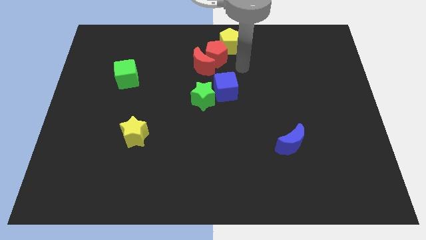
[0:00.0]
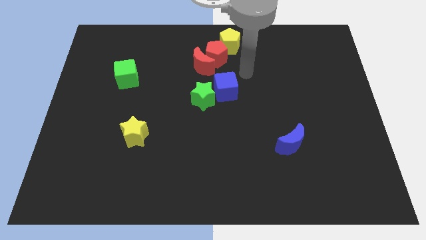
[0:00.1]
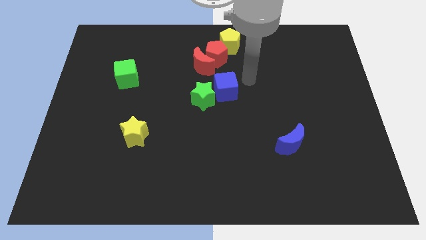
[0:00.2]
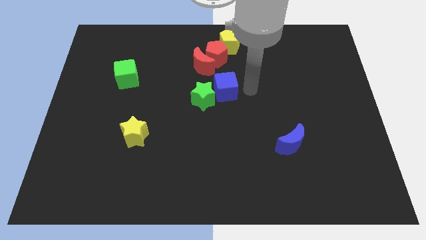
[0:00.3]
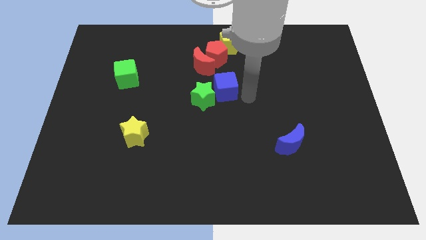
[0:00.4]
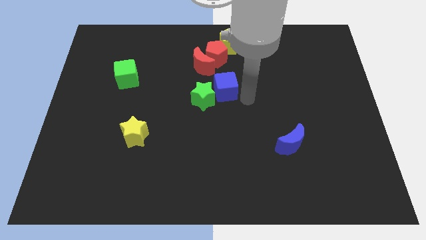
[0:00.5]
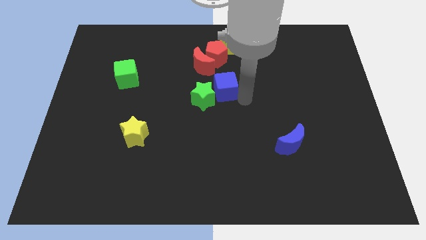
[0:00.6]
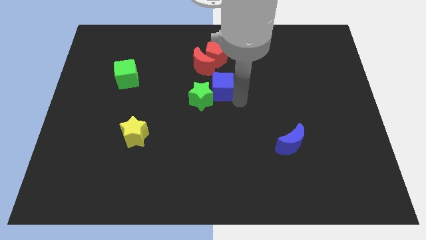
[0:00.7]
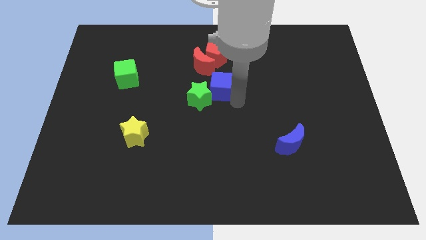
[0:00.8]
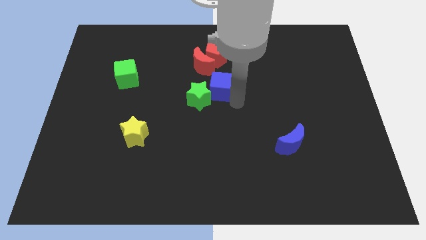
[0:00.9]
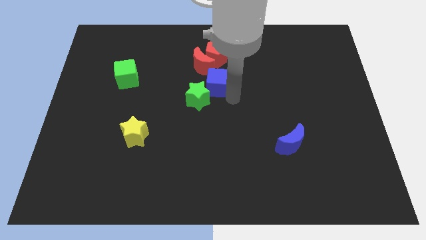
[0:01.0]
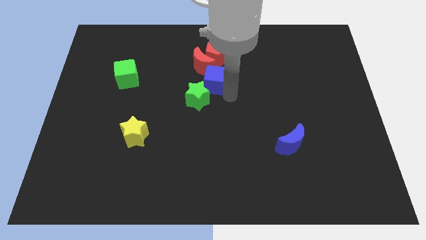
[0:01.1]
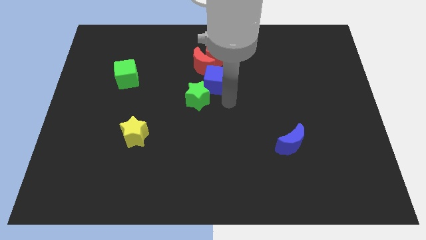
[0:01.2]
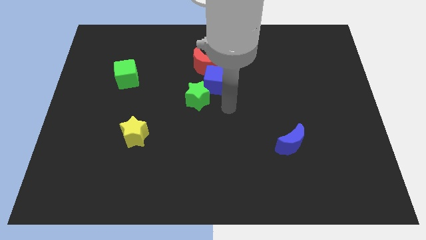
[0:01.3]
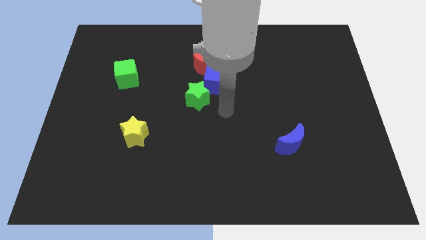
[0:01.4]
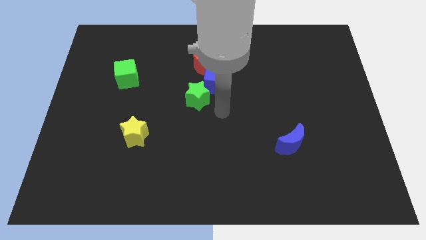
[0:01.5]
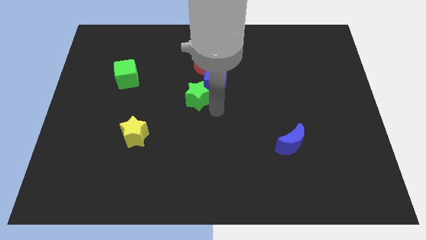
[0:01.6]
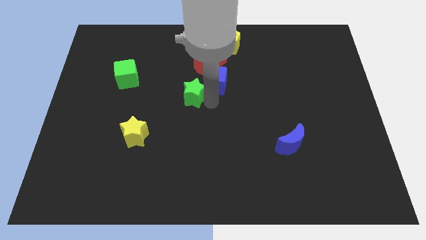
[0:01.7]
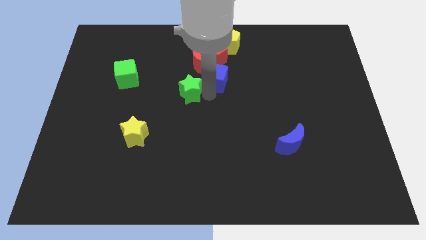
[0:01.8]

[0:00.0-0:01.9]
separate blue cube from the green star

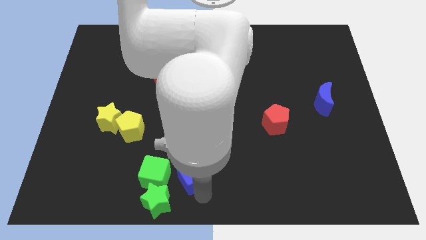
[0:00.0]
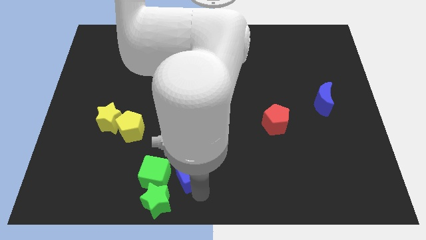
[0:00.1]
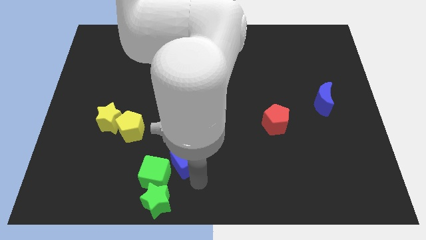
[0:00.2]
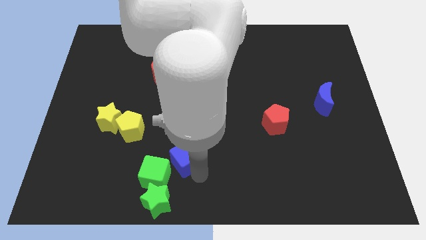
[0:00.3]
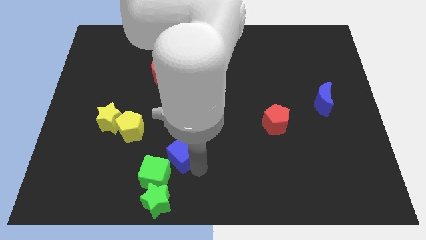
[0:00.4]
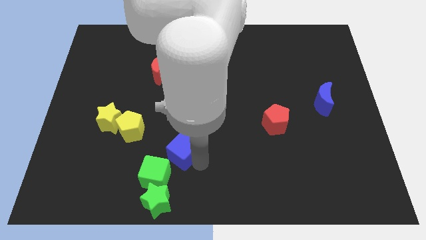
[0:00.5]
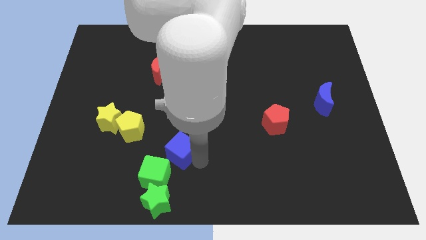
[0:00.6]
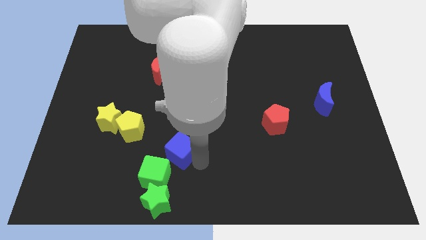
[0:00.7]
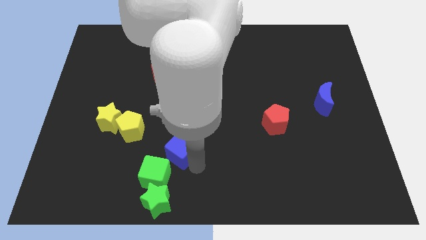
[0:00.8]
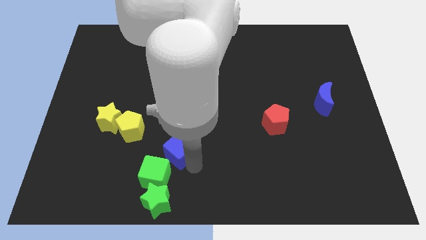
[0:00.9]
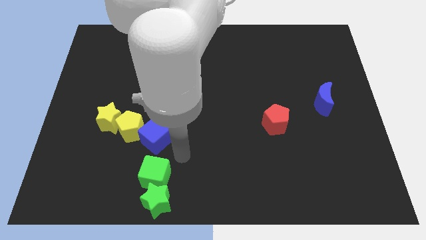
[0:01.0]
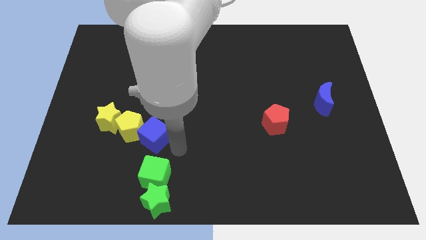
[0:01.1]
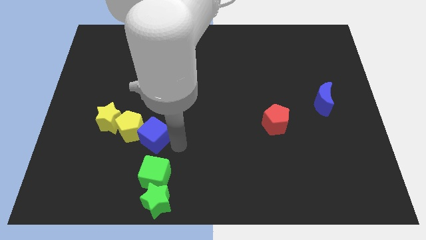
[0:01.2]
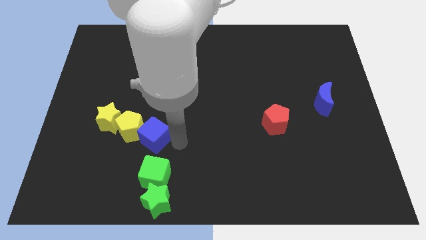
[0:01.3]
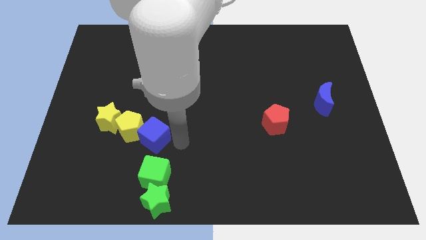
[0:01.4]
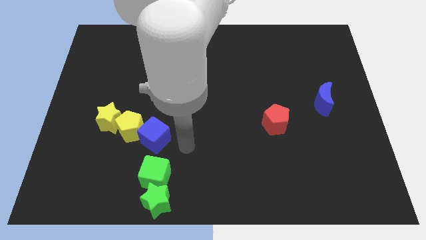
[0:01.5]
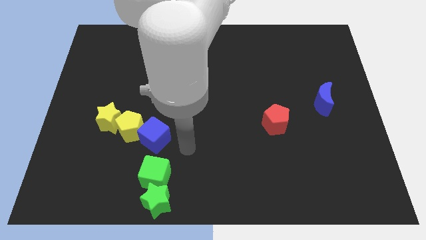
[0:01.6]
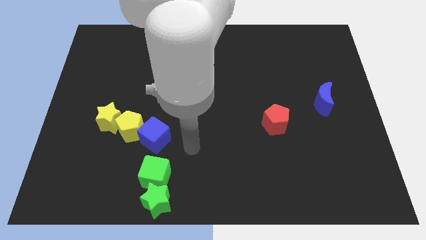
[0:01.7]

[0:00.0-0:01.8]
push the blue cube into the yellow pentagon

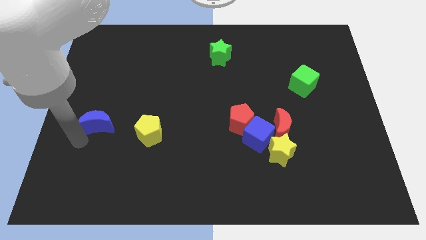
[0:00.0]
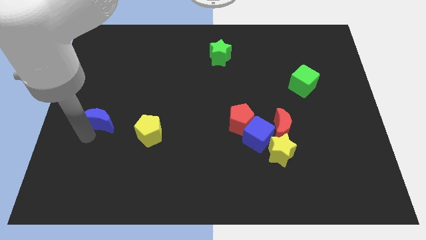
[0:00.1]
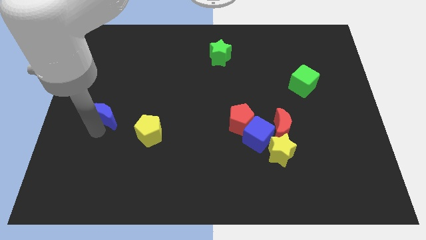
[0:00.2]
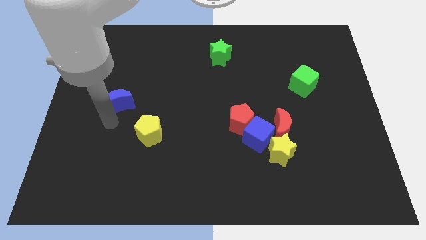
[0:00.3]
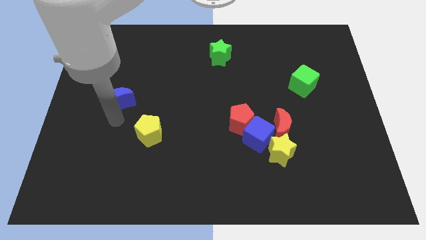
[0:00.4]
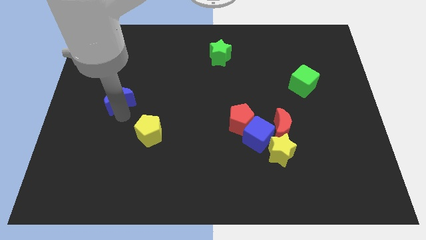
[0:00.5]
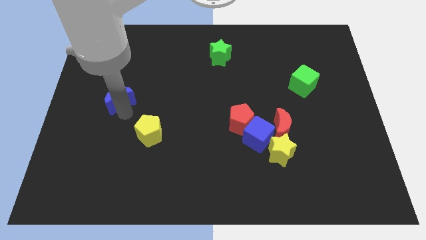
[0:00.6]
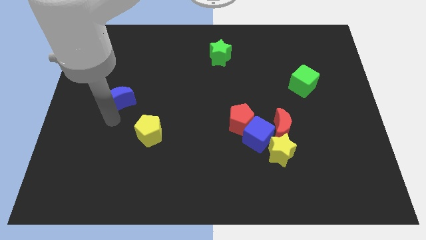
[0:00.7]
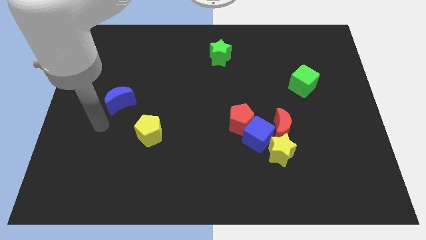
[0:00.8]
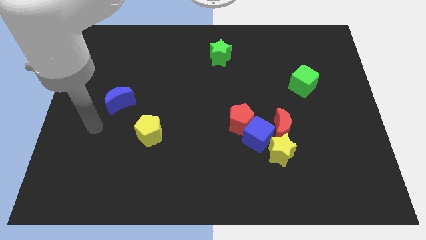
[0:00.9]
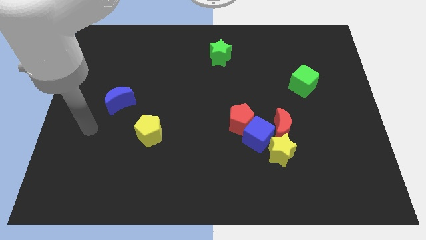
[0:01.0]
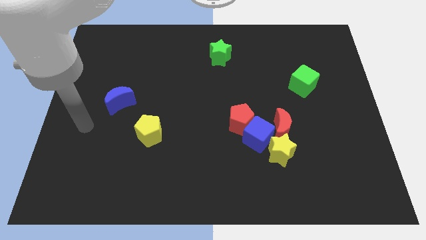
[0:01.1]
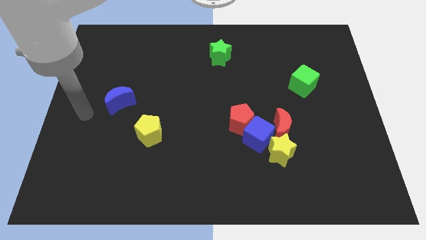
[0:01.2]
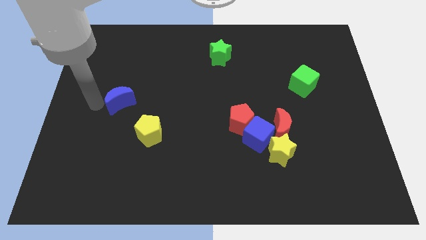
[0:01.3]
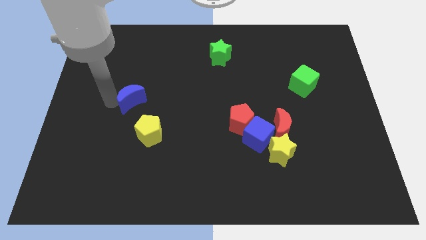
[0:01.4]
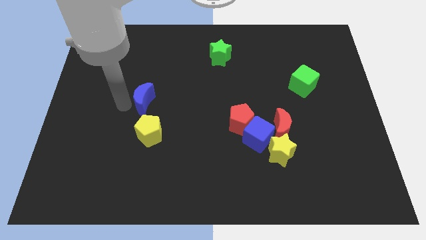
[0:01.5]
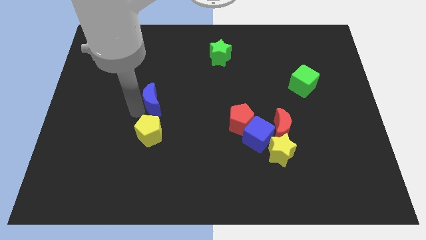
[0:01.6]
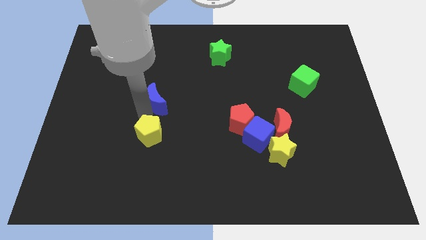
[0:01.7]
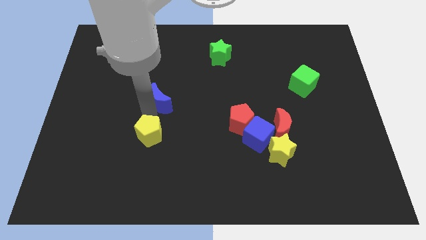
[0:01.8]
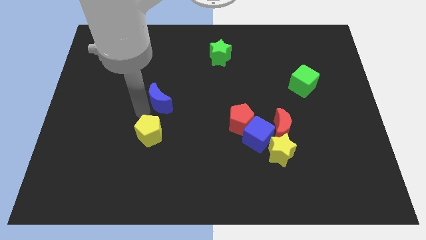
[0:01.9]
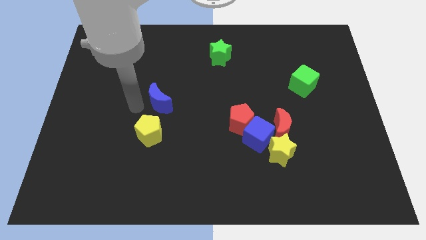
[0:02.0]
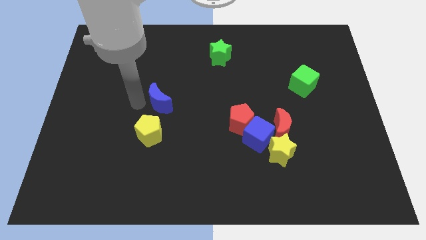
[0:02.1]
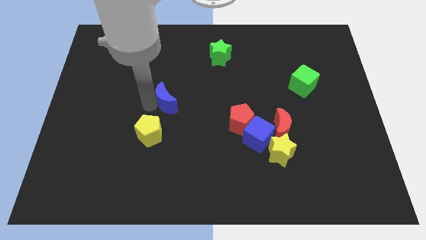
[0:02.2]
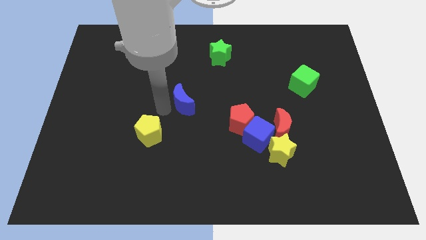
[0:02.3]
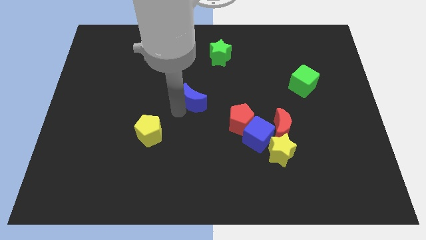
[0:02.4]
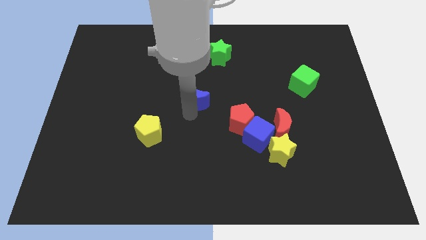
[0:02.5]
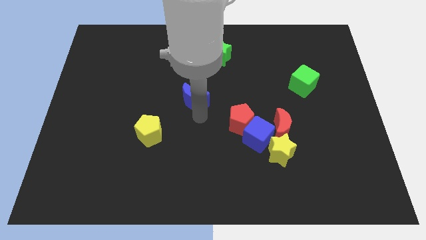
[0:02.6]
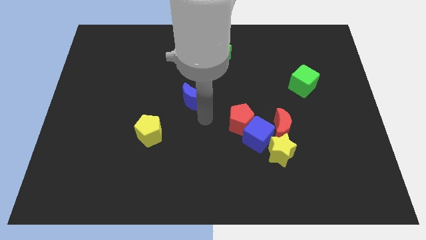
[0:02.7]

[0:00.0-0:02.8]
put the blue moon diagonally top right to the yellow pentagon

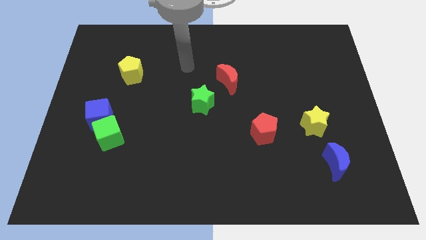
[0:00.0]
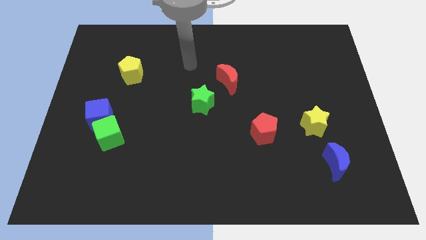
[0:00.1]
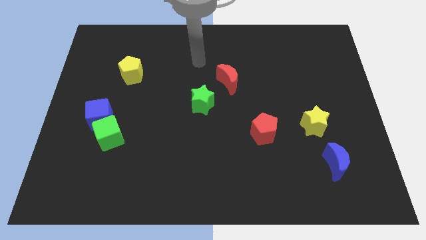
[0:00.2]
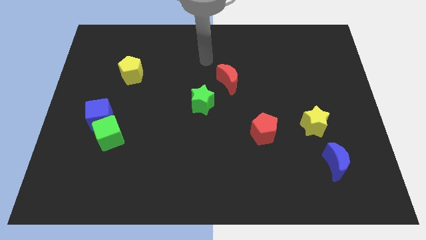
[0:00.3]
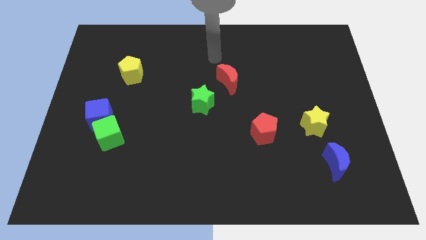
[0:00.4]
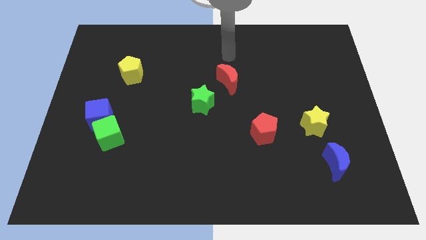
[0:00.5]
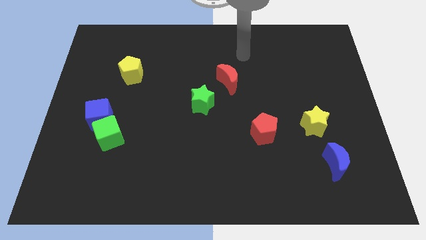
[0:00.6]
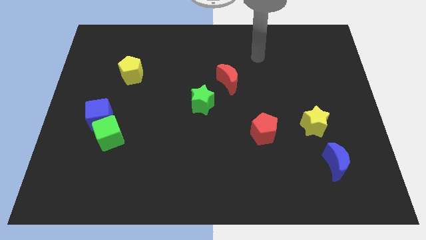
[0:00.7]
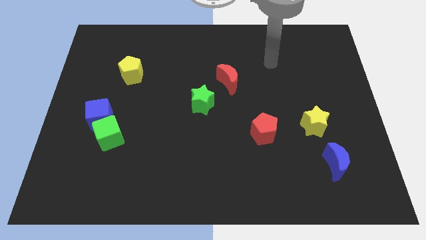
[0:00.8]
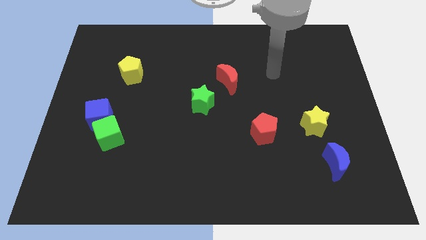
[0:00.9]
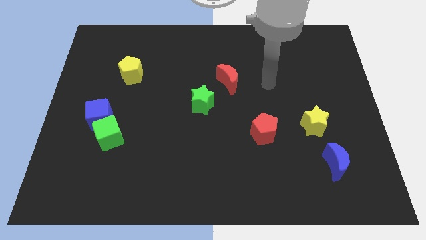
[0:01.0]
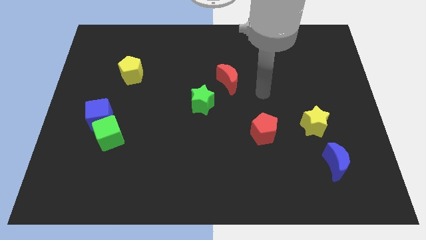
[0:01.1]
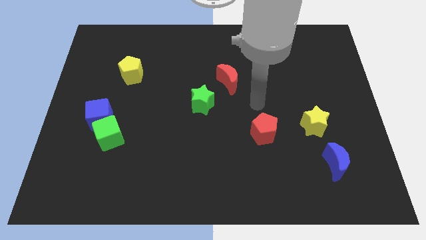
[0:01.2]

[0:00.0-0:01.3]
place the arm above the red pentagon

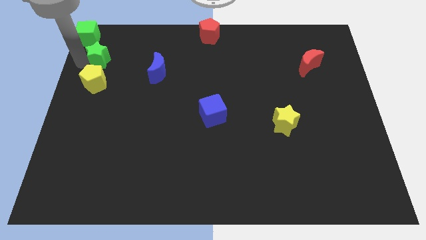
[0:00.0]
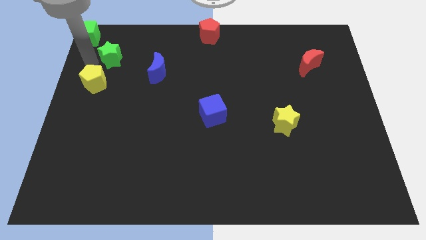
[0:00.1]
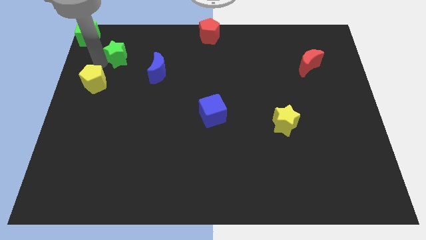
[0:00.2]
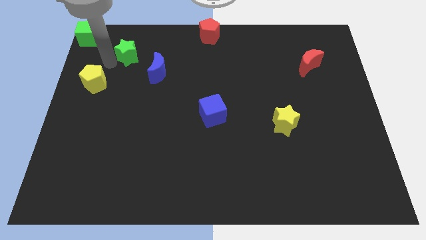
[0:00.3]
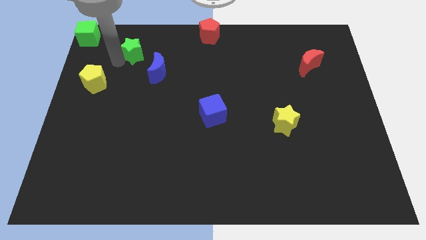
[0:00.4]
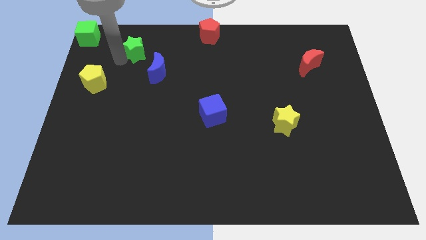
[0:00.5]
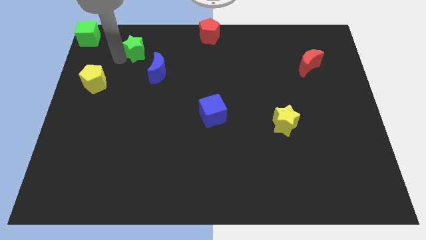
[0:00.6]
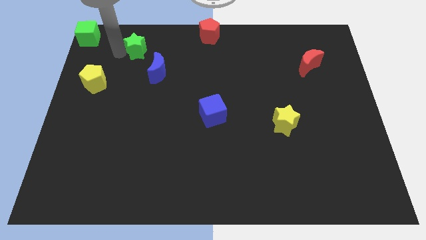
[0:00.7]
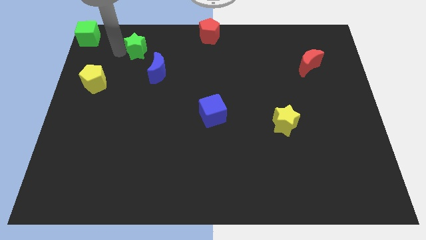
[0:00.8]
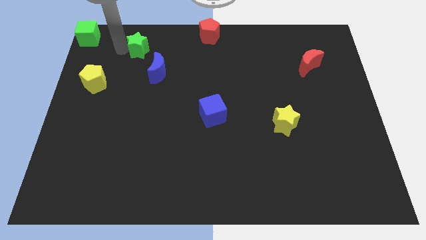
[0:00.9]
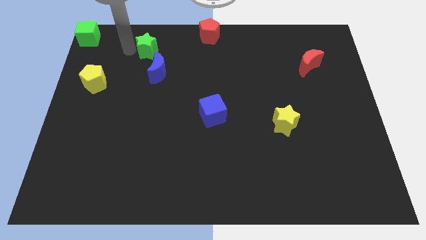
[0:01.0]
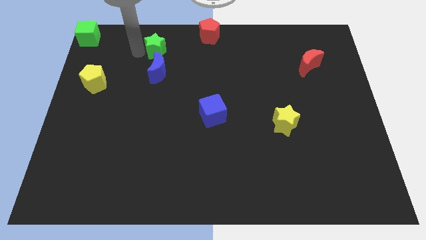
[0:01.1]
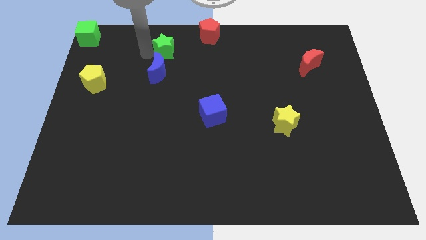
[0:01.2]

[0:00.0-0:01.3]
put the green star at the top of the blue crescent
